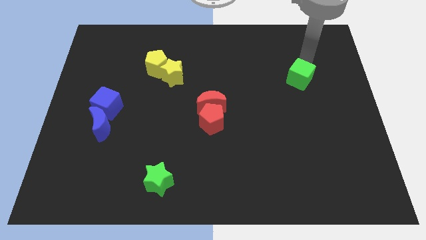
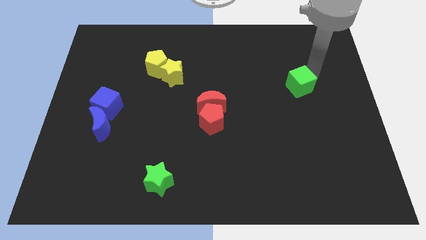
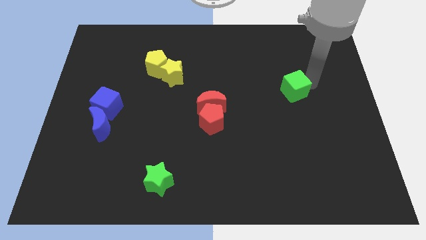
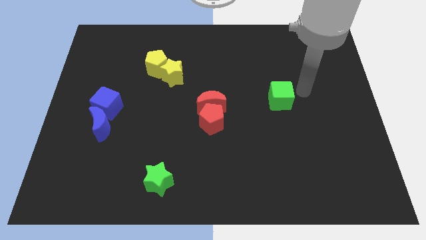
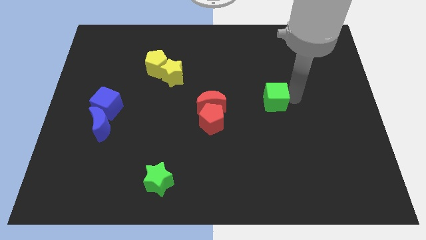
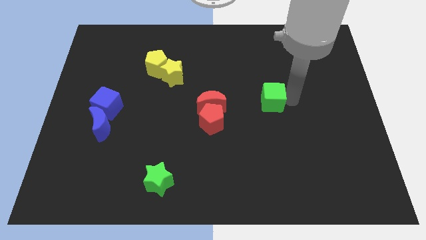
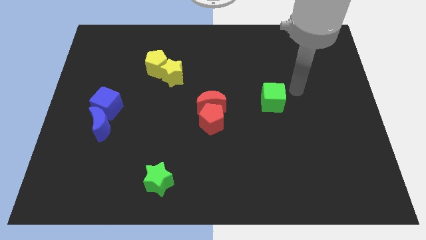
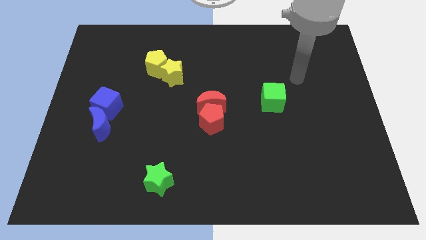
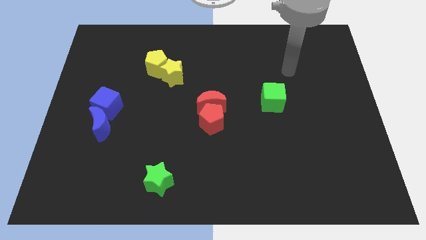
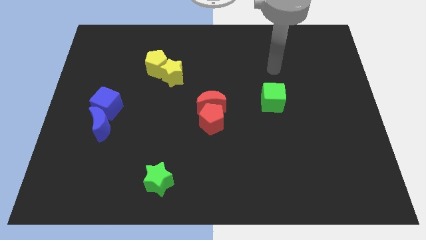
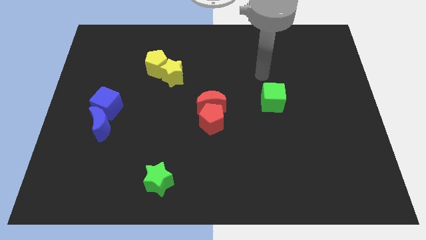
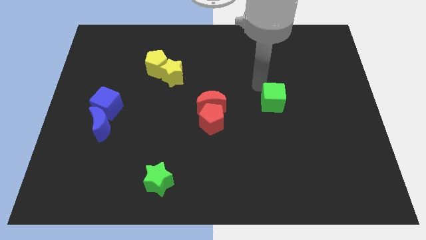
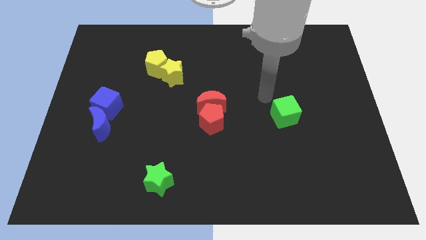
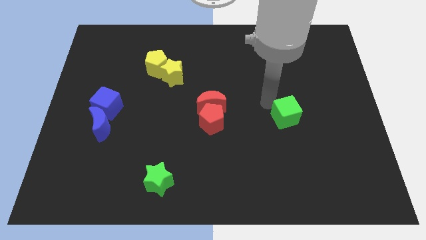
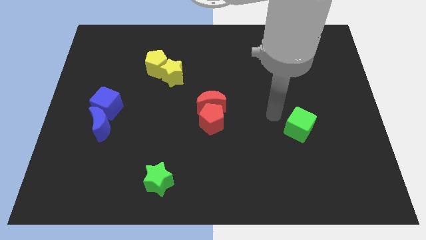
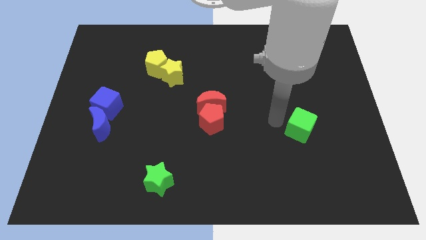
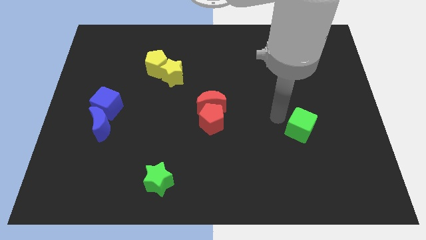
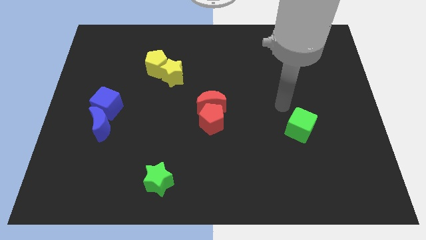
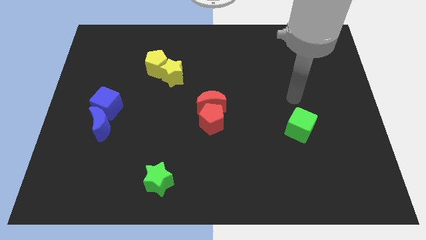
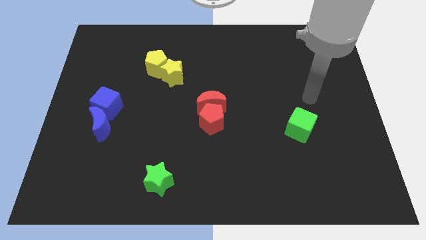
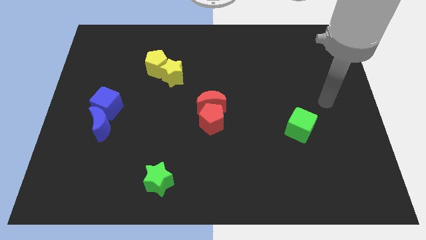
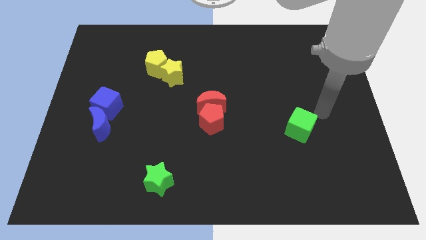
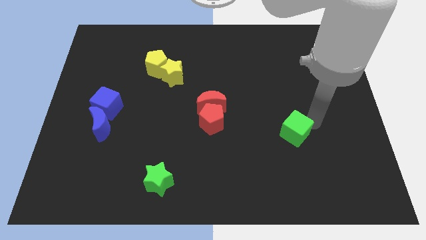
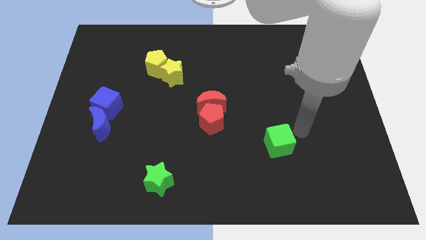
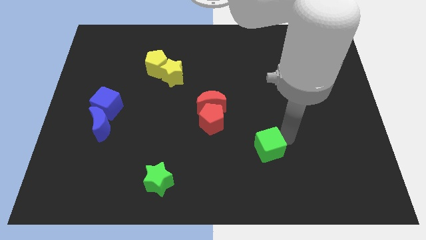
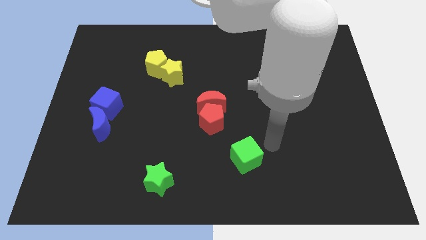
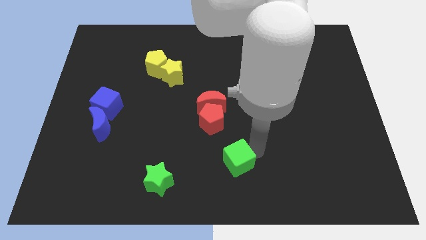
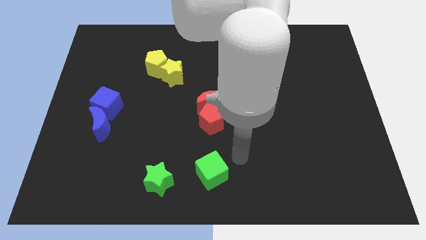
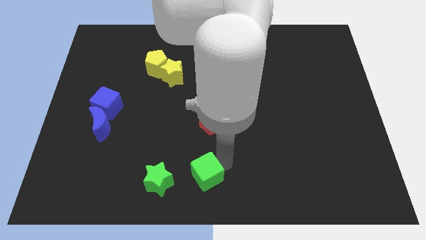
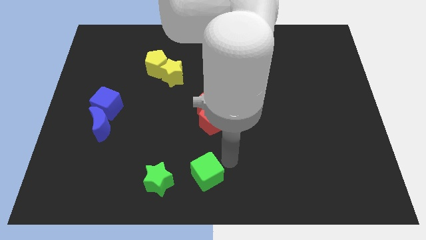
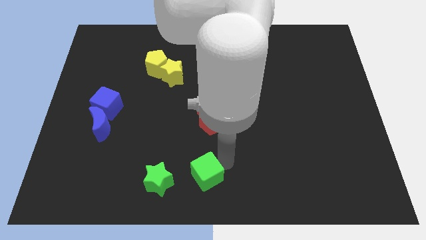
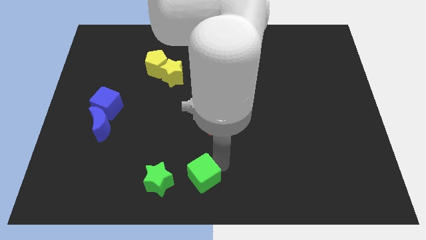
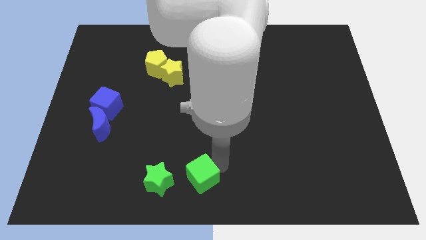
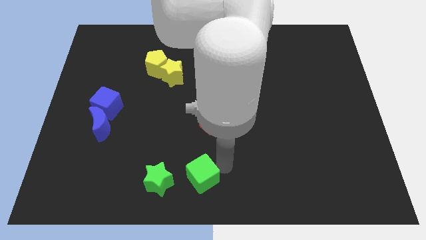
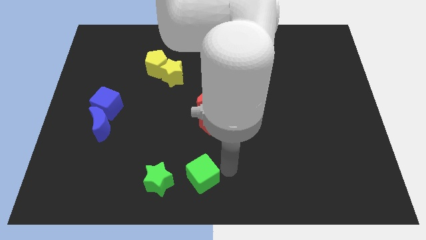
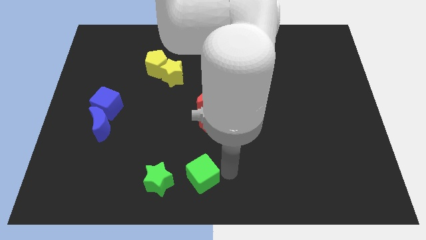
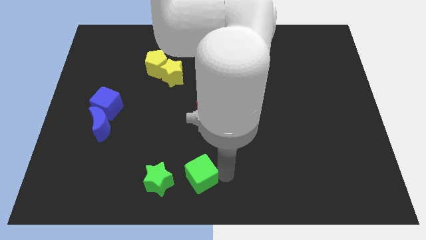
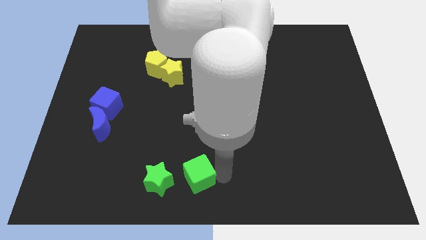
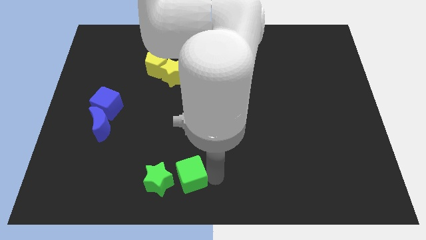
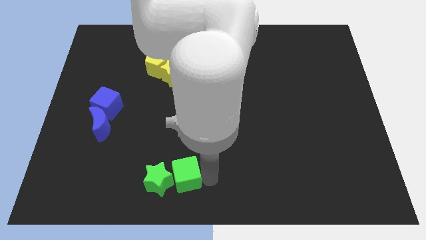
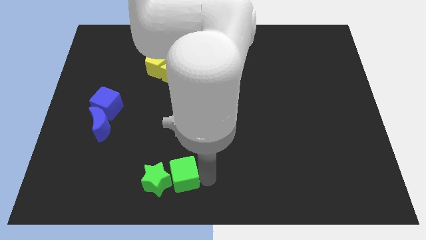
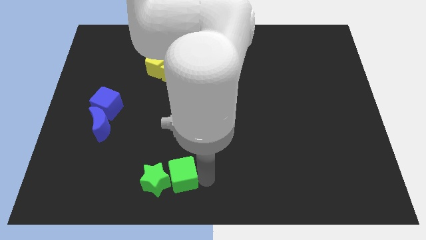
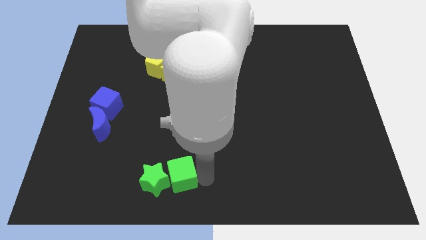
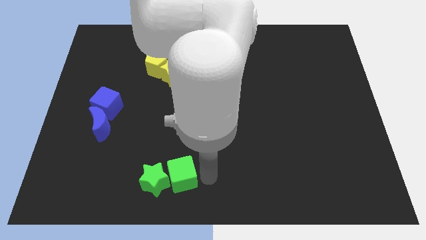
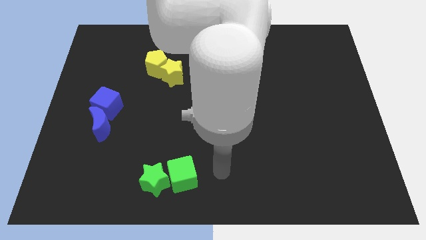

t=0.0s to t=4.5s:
drag the green cube into the green star

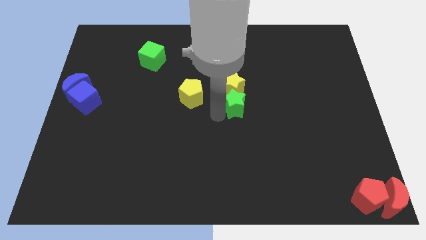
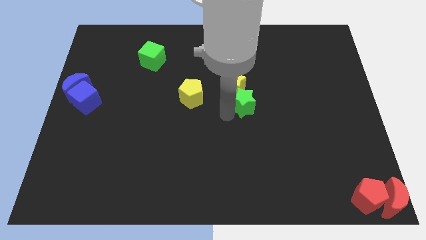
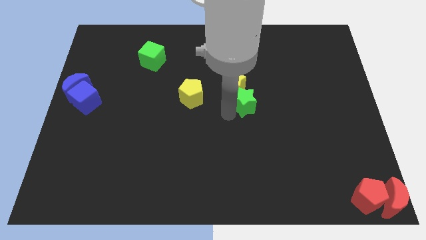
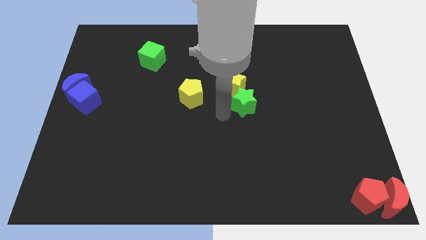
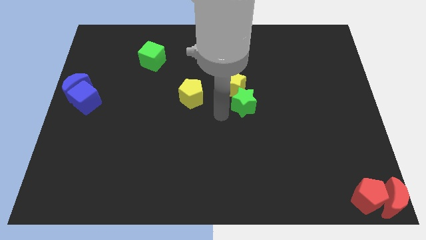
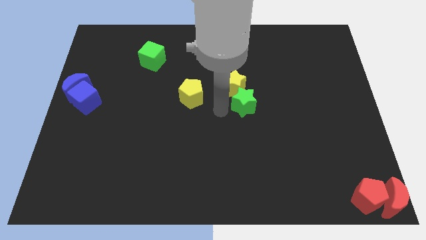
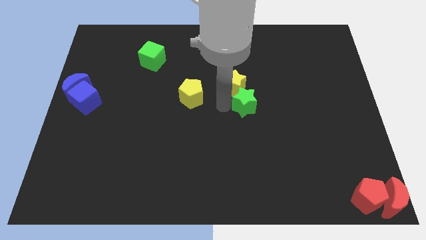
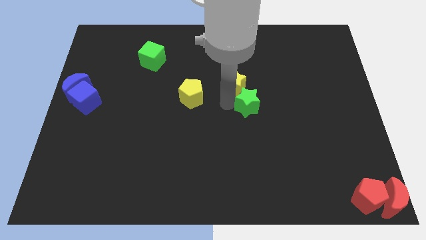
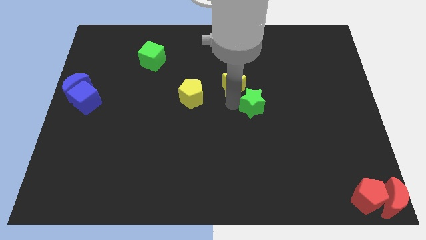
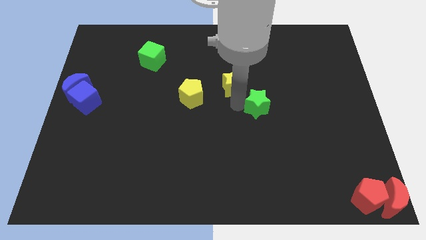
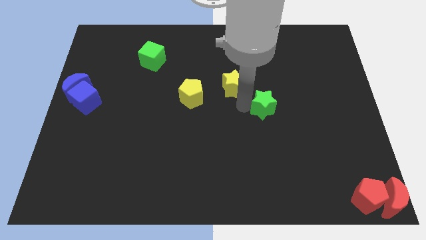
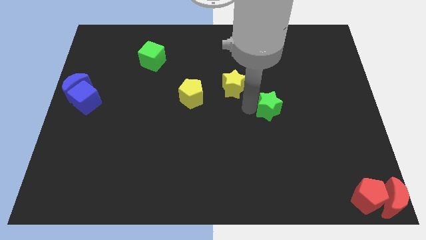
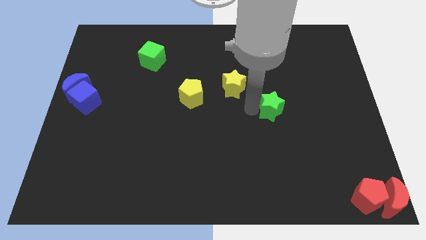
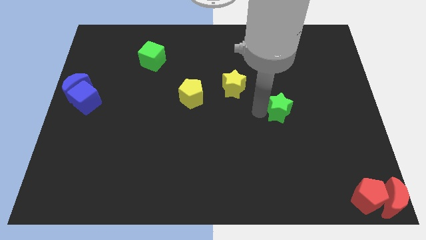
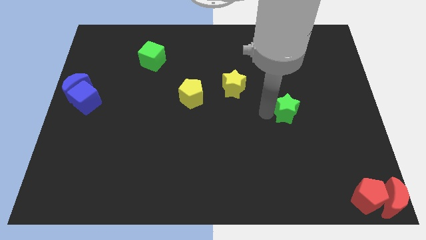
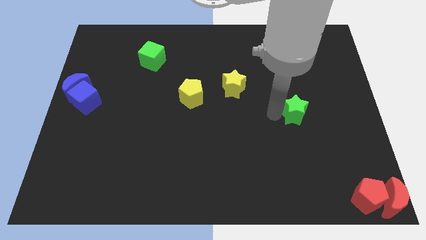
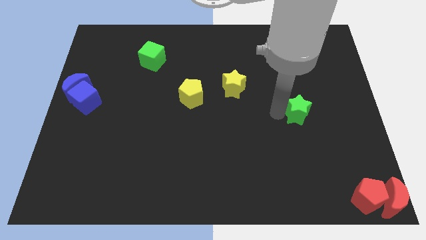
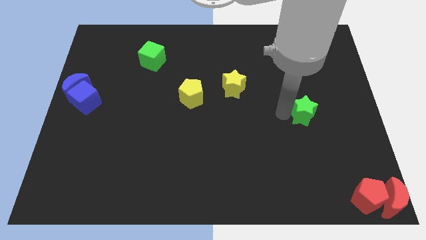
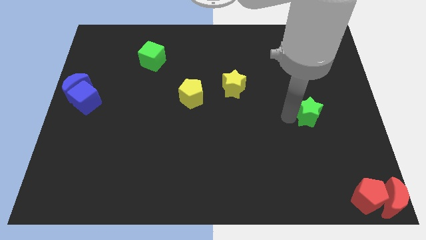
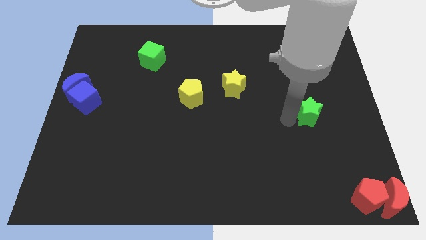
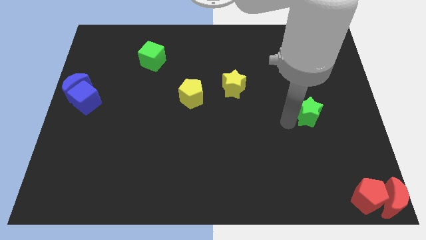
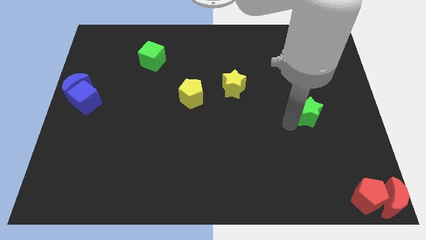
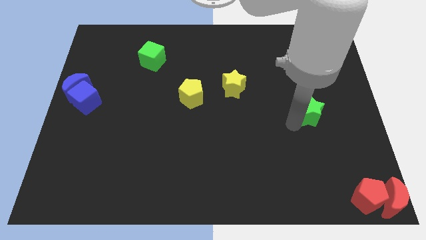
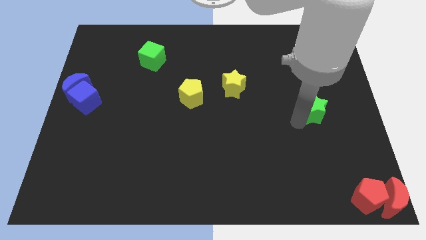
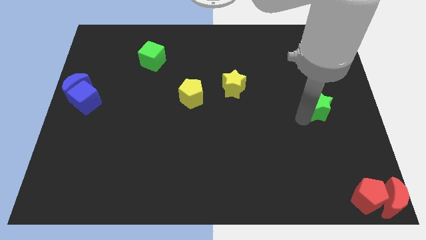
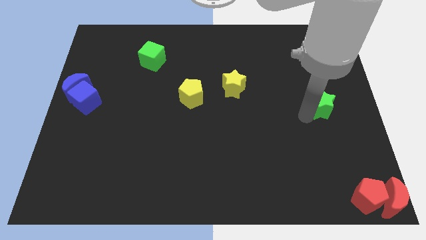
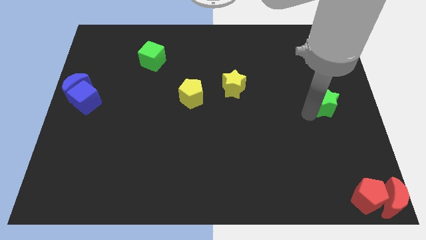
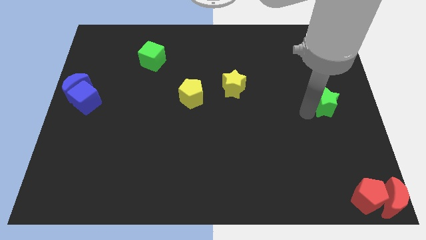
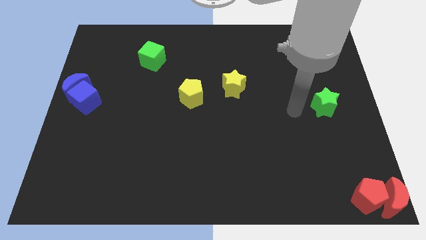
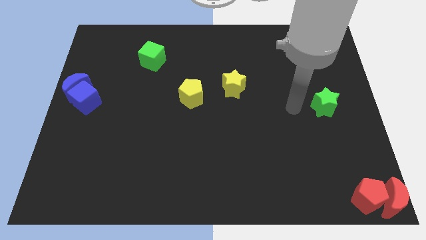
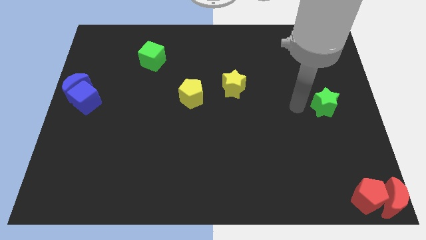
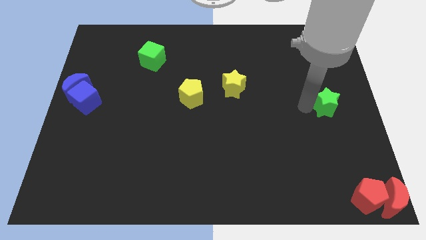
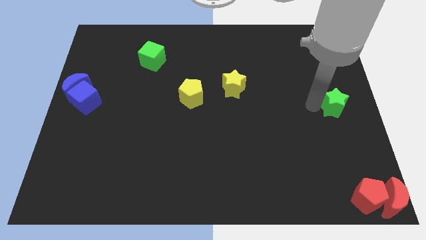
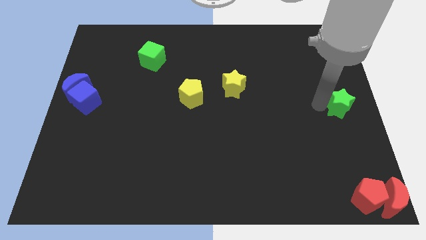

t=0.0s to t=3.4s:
drag the green star towards the center right

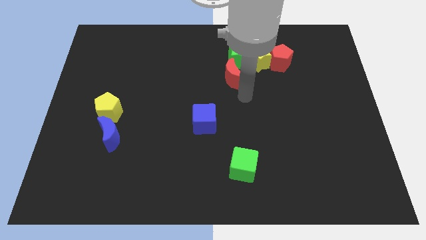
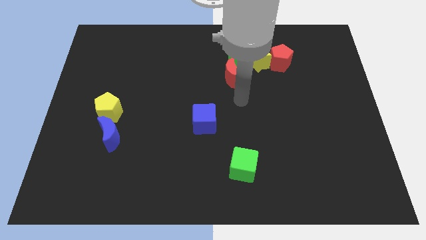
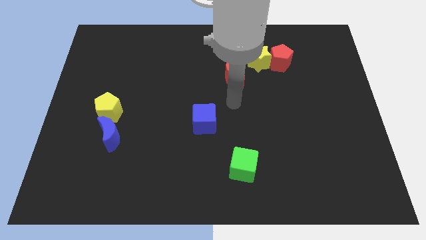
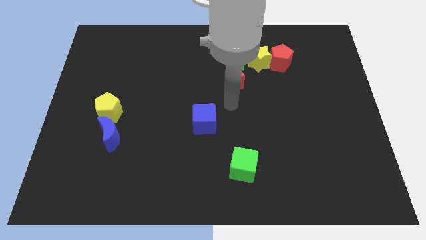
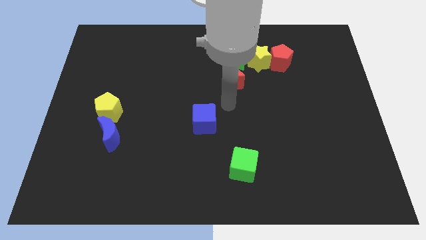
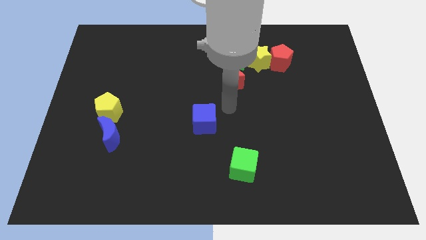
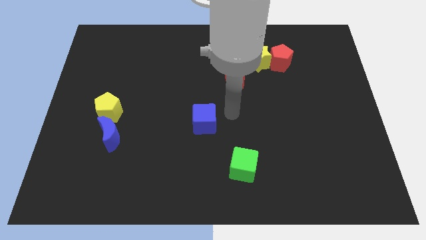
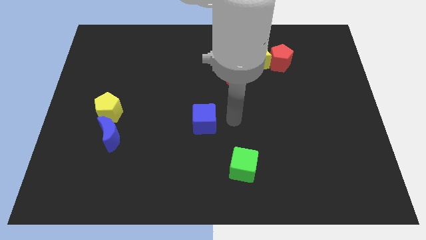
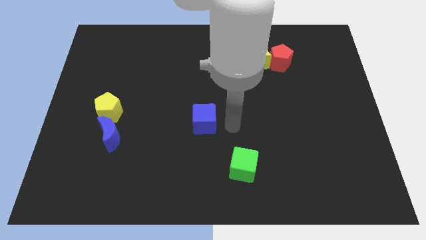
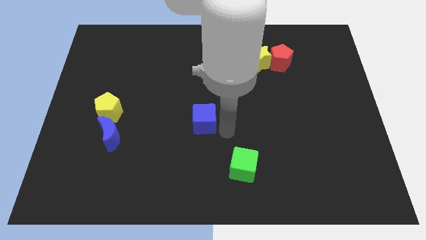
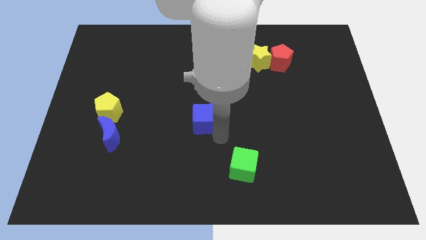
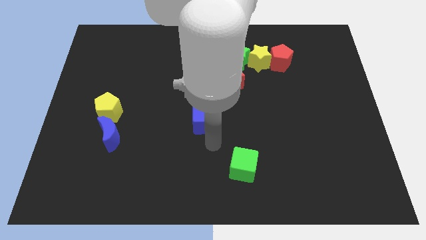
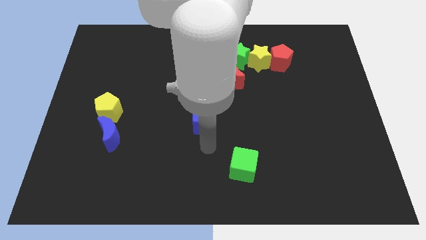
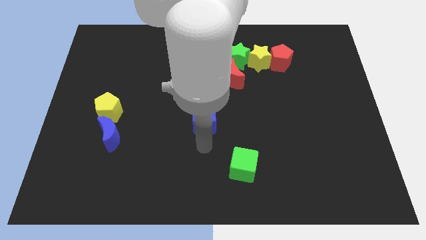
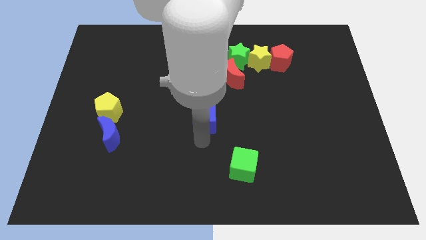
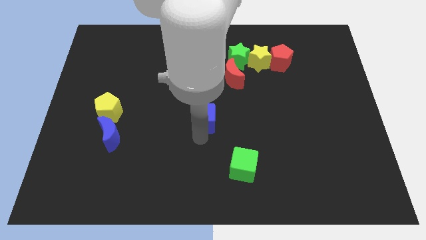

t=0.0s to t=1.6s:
move arm to the bottom of blue cube
